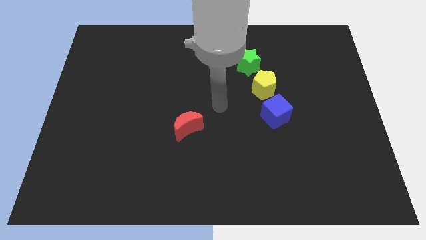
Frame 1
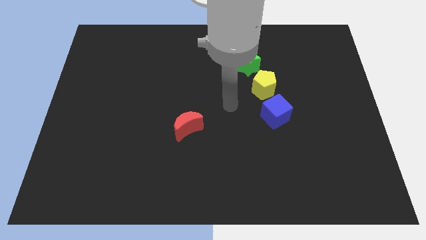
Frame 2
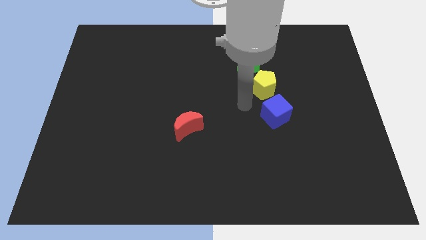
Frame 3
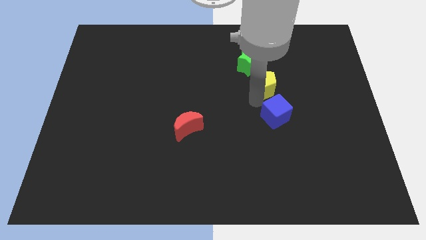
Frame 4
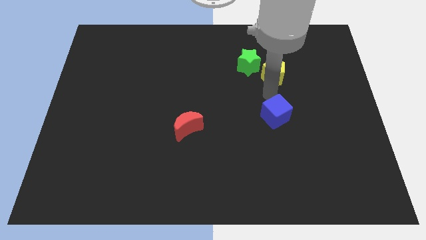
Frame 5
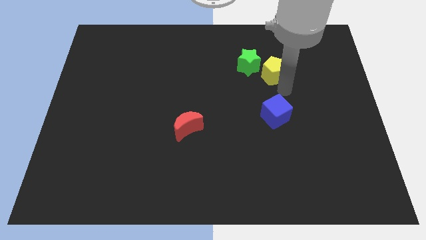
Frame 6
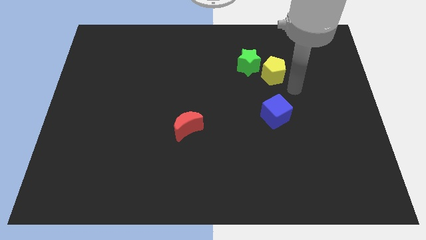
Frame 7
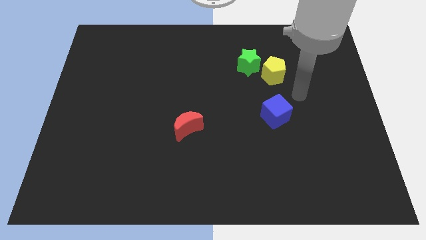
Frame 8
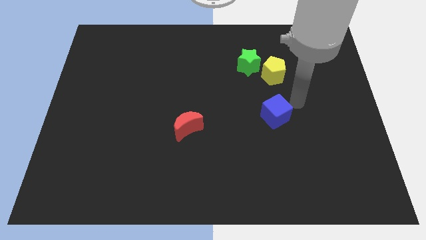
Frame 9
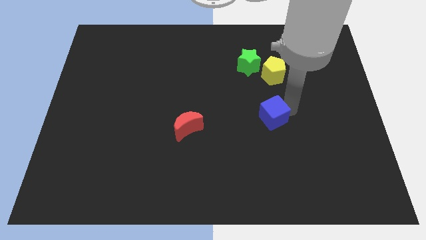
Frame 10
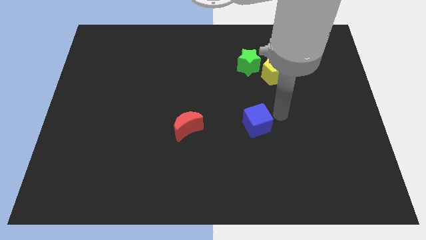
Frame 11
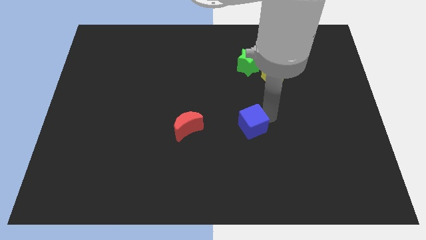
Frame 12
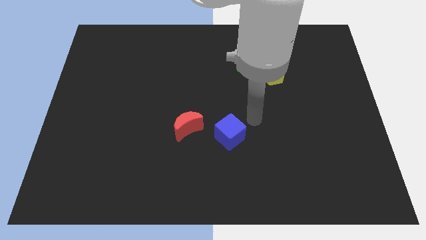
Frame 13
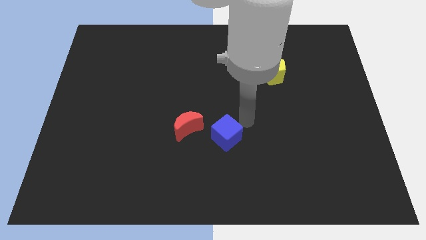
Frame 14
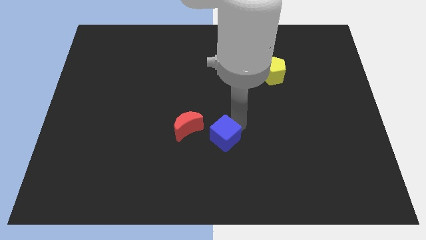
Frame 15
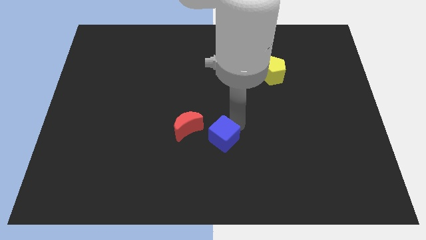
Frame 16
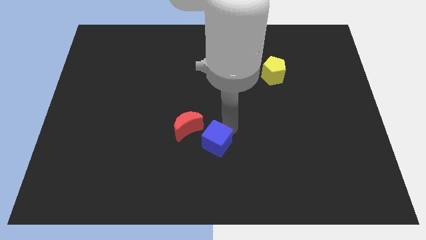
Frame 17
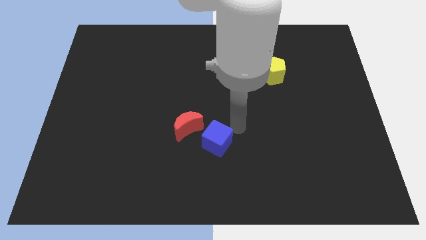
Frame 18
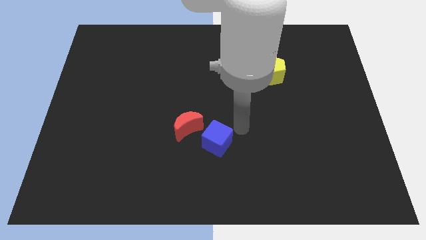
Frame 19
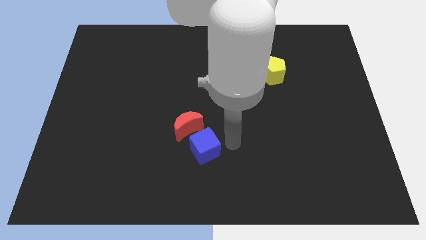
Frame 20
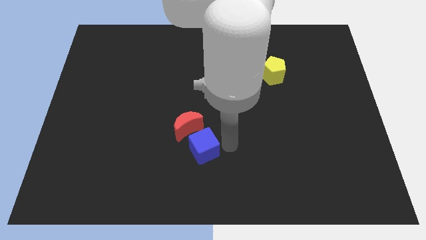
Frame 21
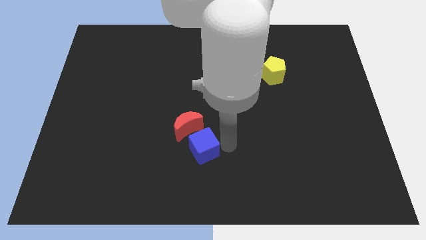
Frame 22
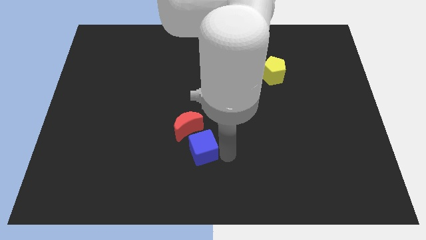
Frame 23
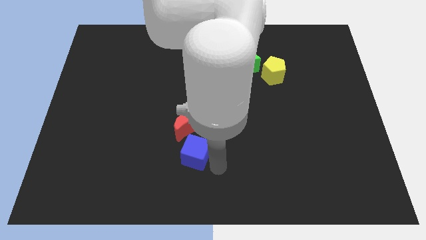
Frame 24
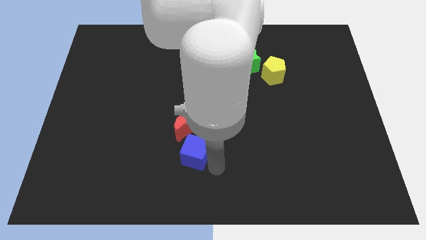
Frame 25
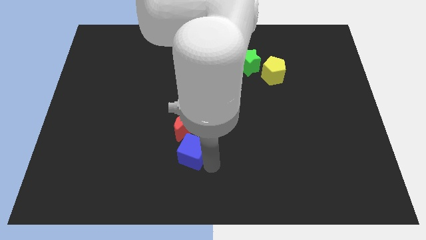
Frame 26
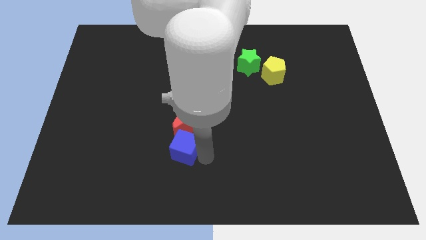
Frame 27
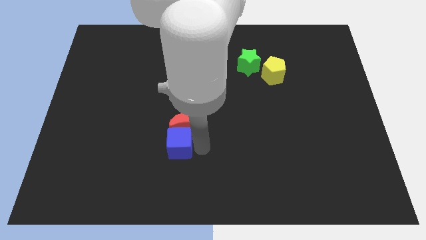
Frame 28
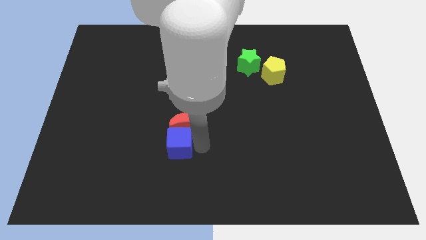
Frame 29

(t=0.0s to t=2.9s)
push the blue cube towards the moon

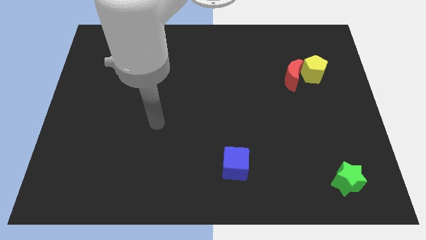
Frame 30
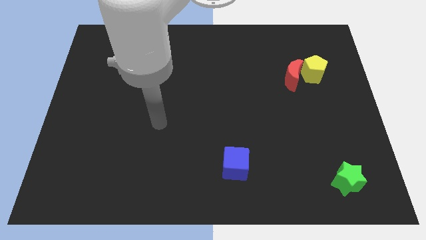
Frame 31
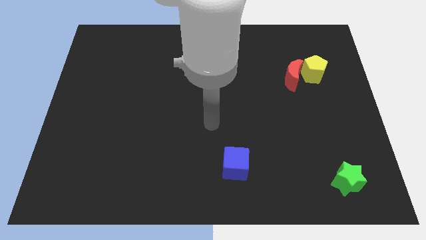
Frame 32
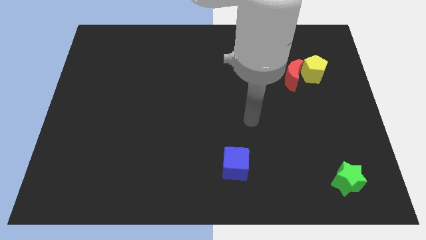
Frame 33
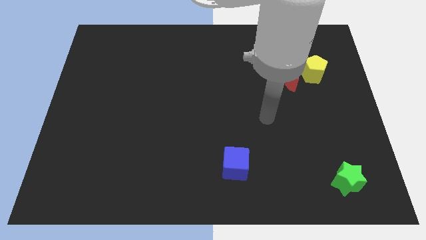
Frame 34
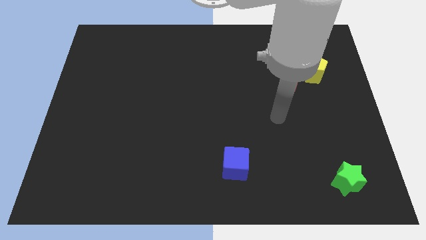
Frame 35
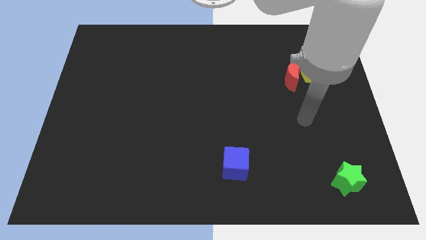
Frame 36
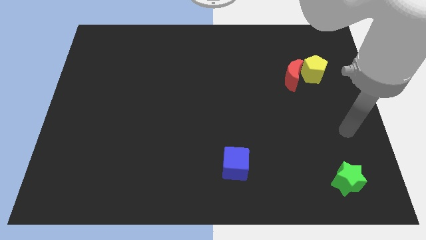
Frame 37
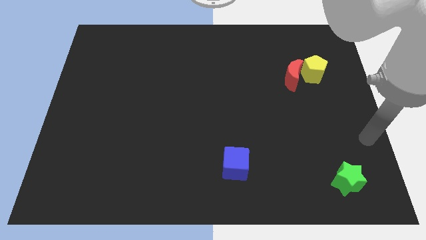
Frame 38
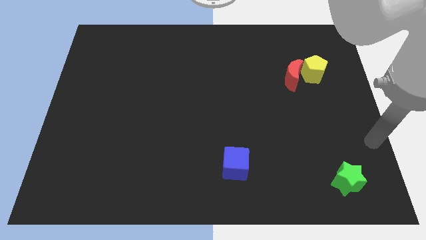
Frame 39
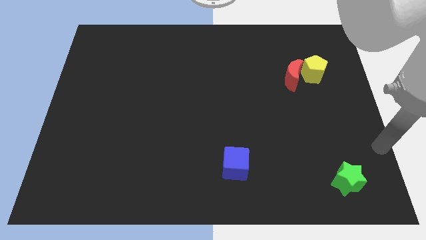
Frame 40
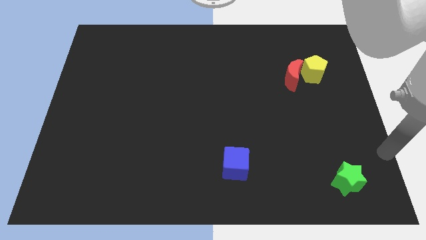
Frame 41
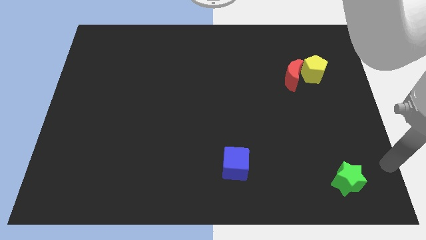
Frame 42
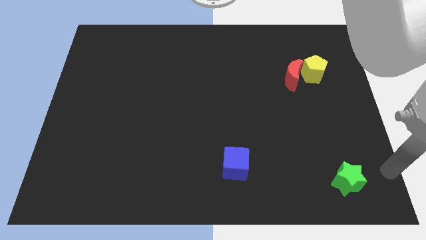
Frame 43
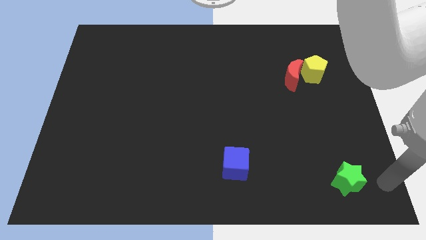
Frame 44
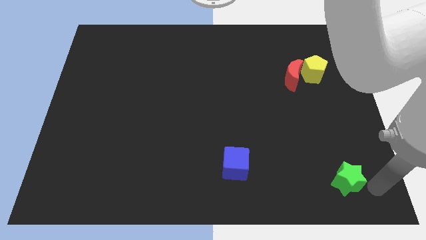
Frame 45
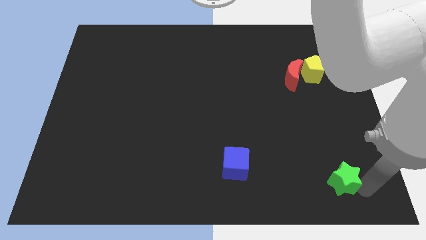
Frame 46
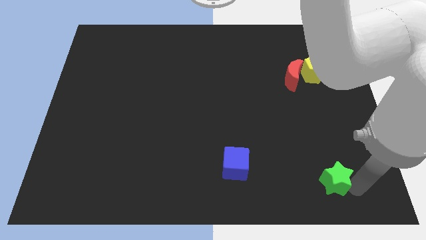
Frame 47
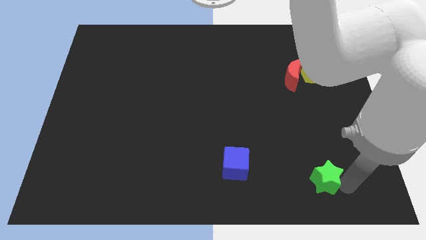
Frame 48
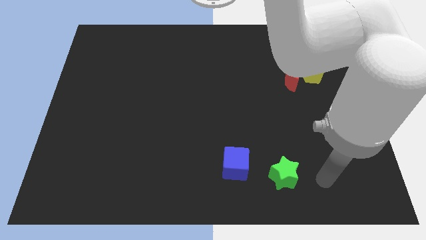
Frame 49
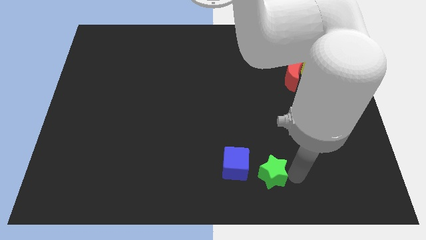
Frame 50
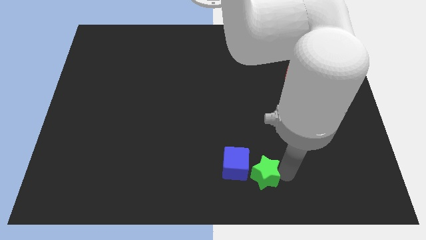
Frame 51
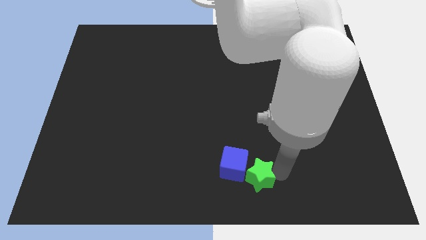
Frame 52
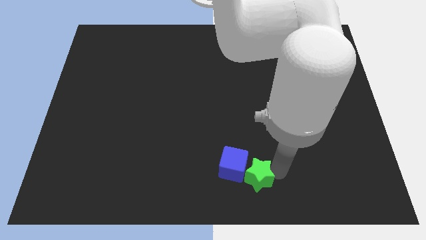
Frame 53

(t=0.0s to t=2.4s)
push the star to the blue block

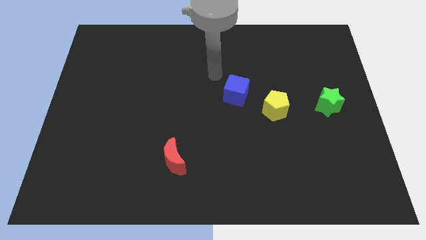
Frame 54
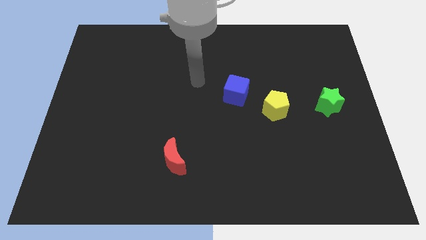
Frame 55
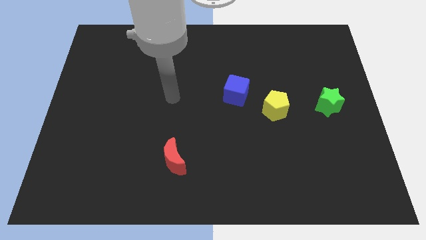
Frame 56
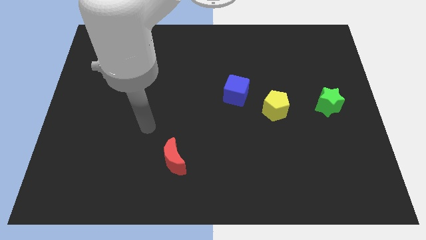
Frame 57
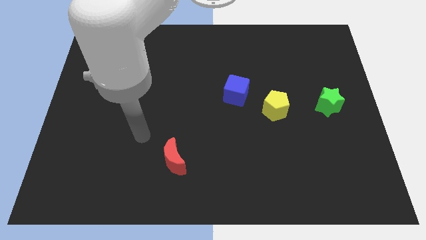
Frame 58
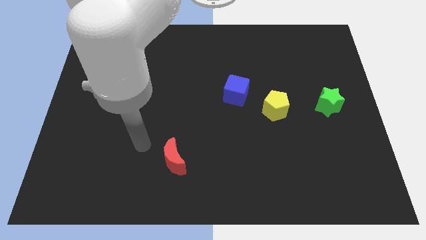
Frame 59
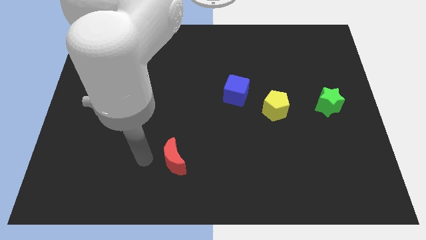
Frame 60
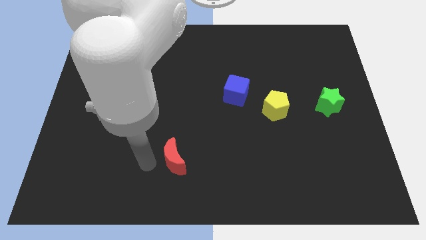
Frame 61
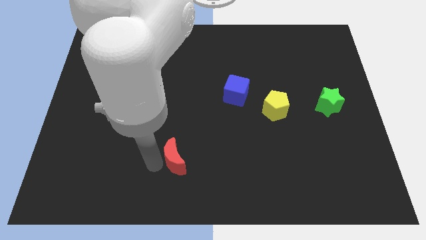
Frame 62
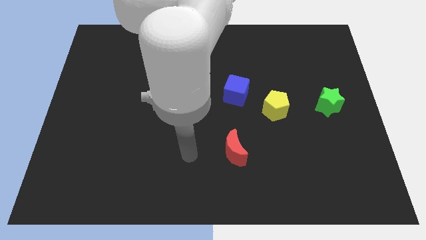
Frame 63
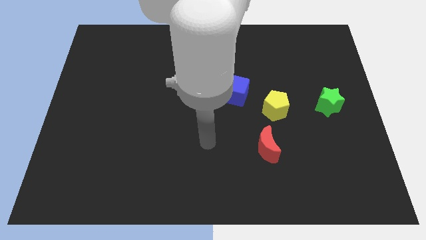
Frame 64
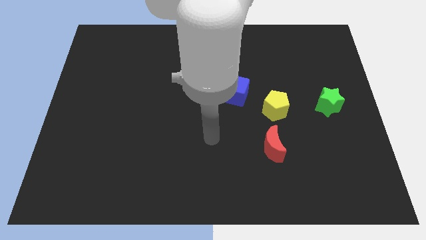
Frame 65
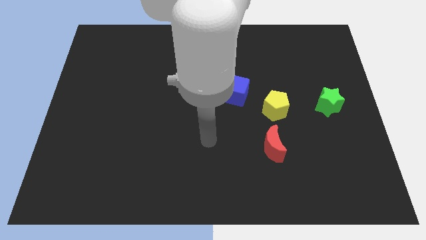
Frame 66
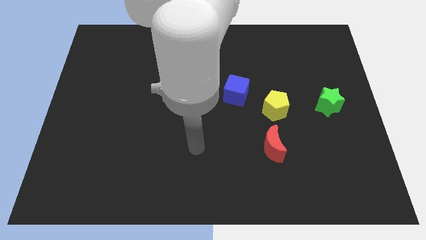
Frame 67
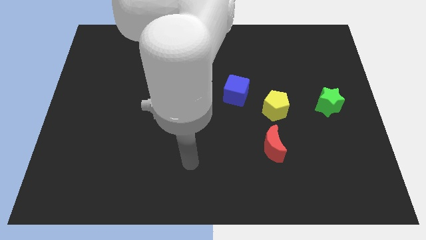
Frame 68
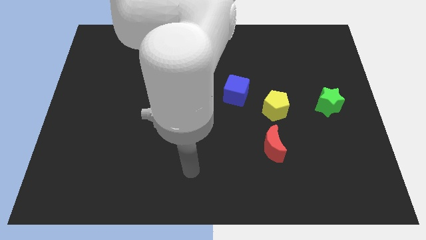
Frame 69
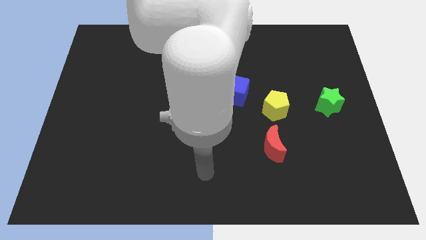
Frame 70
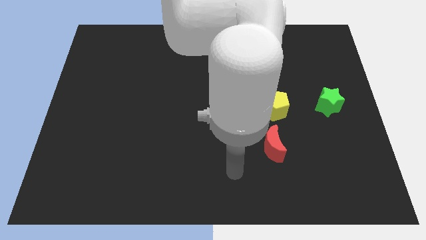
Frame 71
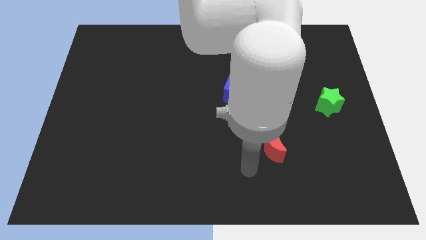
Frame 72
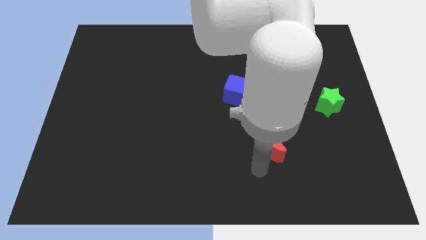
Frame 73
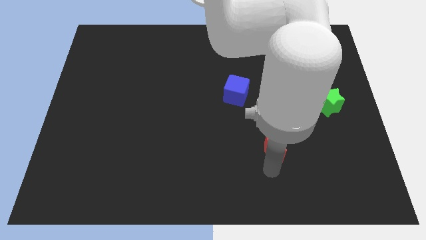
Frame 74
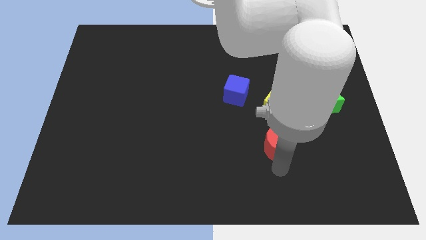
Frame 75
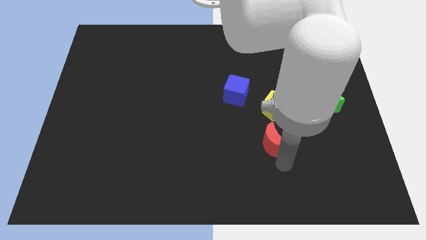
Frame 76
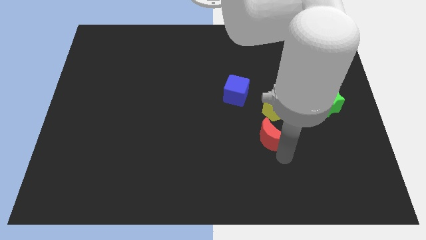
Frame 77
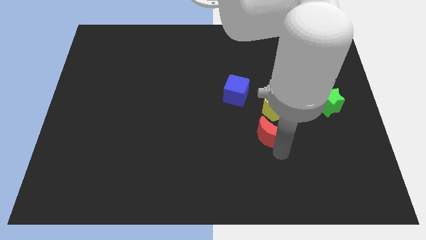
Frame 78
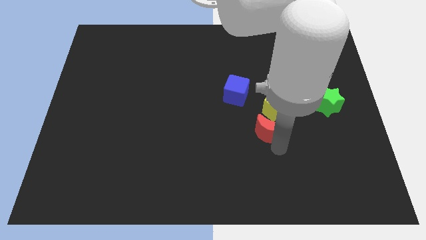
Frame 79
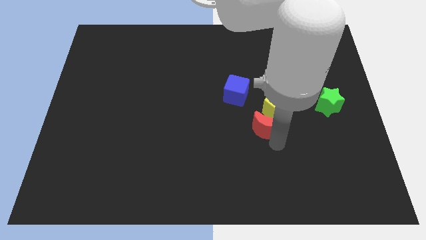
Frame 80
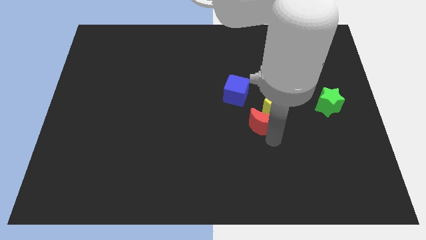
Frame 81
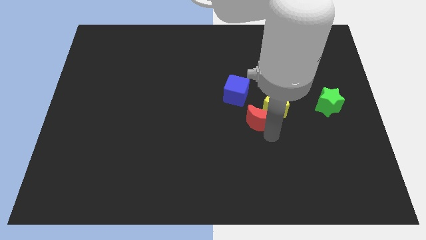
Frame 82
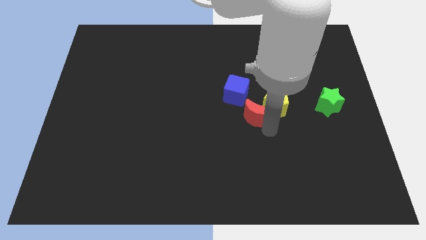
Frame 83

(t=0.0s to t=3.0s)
put the red moon to the yellow pentagon

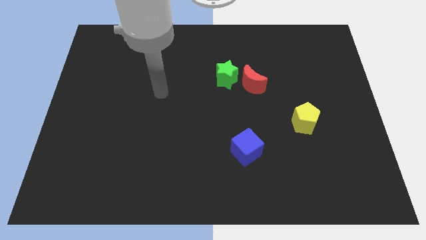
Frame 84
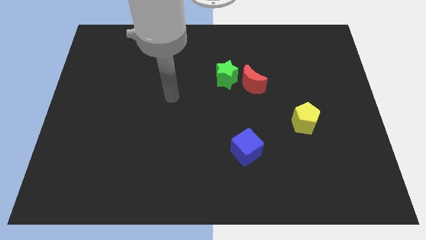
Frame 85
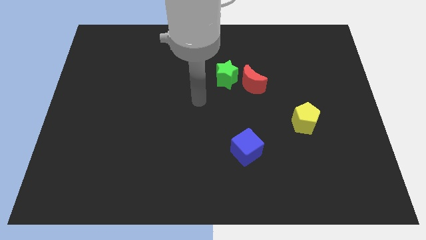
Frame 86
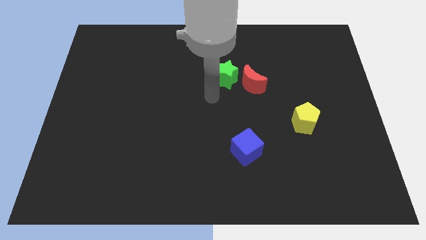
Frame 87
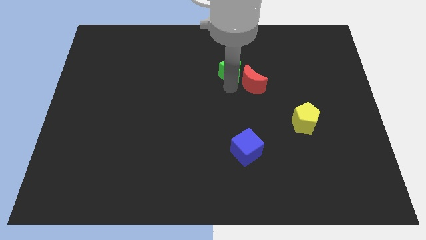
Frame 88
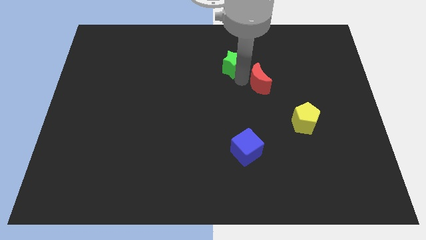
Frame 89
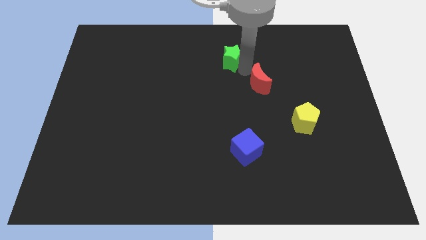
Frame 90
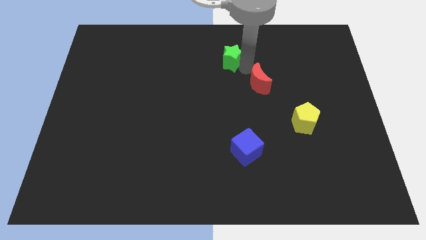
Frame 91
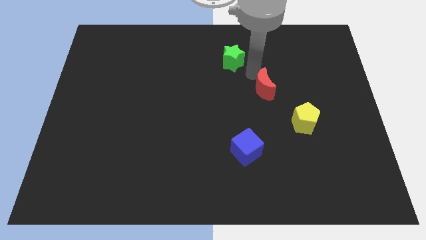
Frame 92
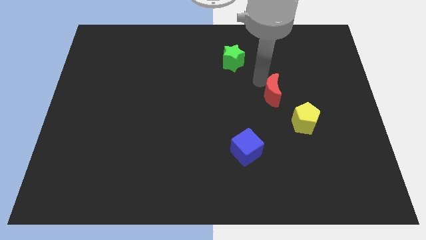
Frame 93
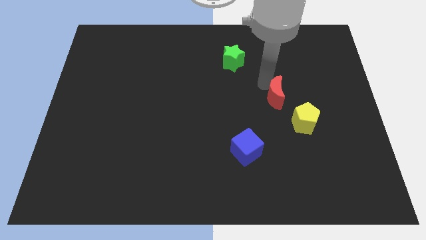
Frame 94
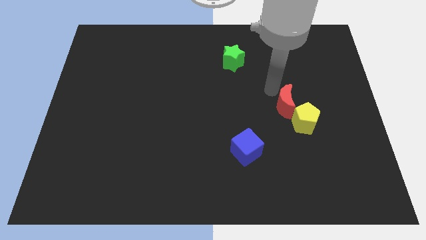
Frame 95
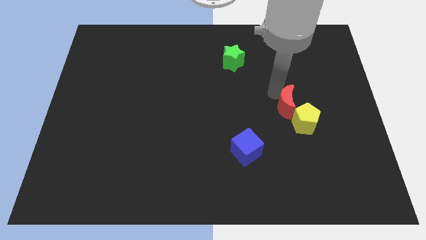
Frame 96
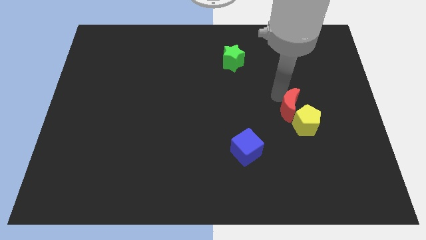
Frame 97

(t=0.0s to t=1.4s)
slide the moon to the pentagon
